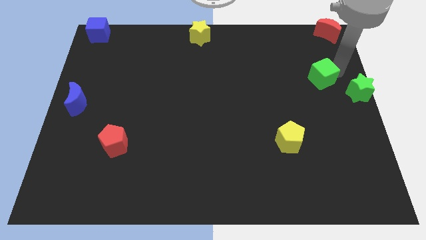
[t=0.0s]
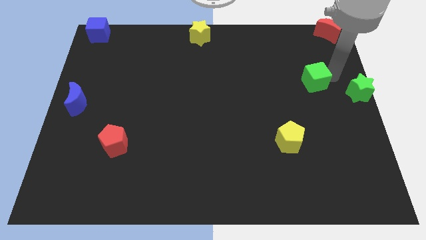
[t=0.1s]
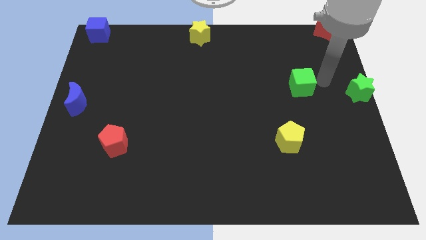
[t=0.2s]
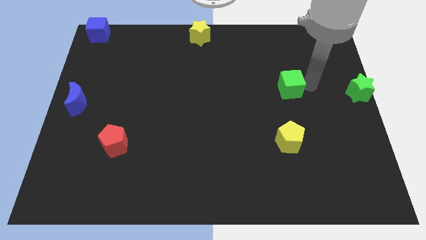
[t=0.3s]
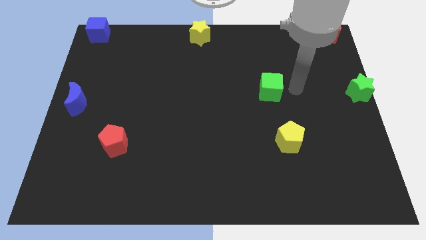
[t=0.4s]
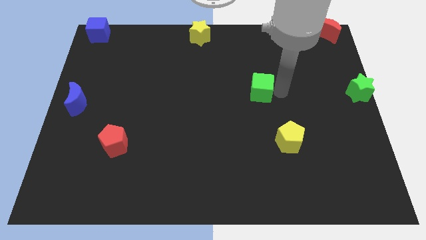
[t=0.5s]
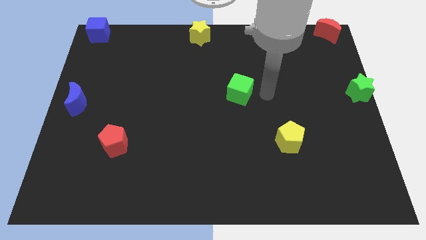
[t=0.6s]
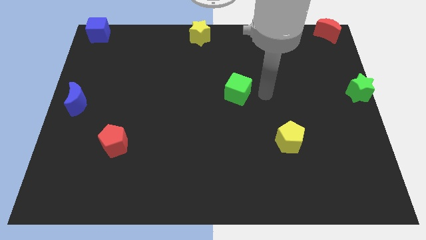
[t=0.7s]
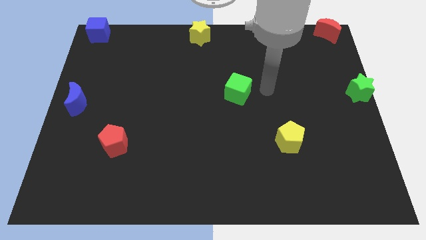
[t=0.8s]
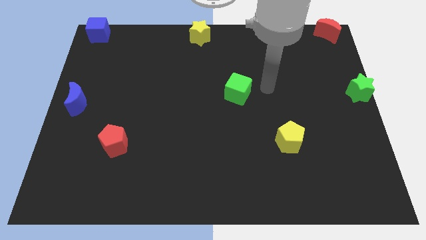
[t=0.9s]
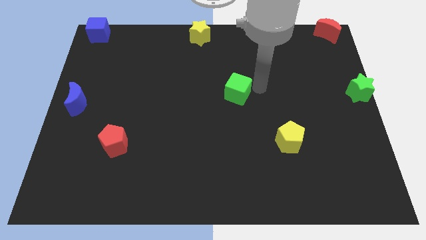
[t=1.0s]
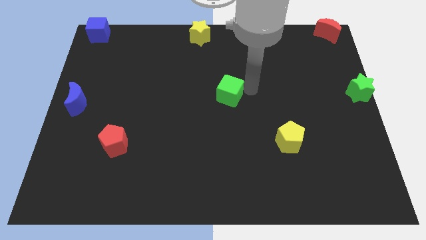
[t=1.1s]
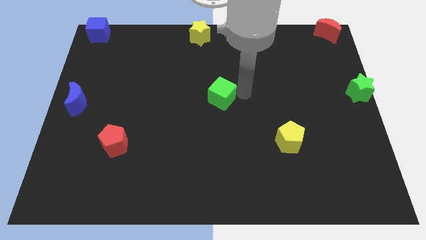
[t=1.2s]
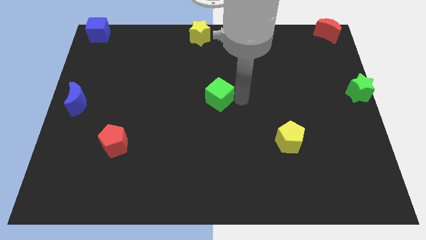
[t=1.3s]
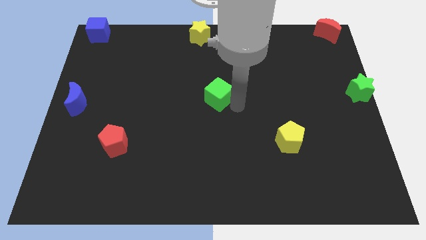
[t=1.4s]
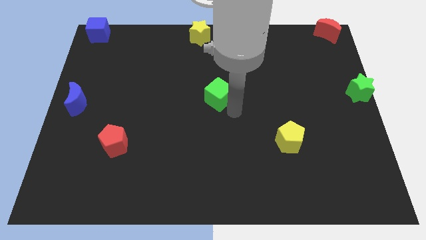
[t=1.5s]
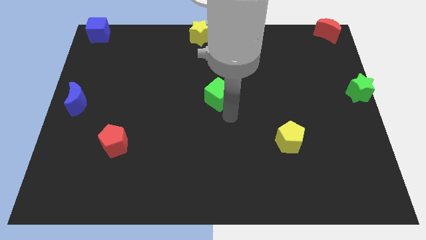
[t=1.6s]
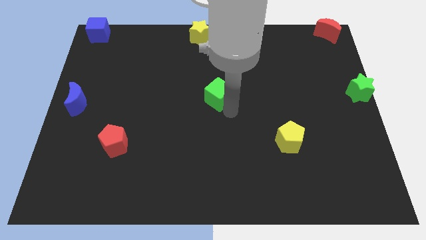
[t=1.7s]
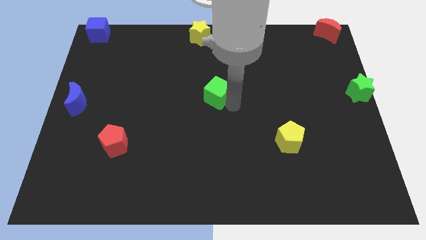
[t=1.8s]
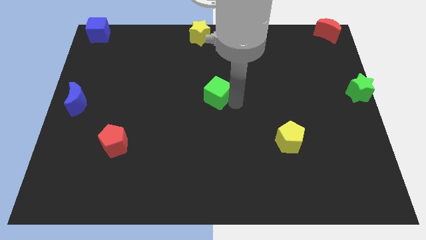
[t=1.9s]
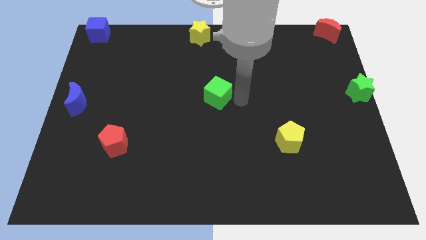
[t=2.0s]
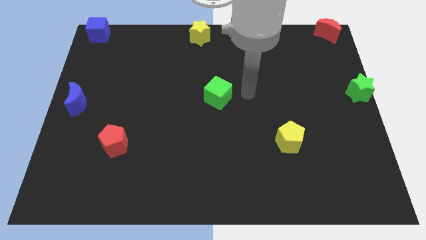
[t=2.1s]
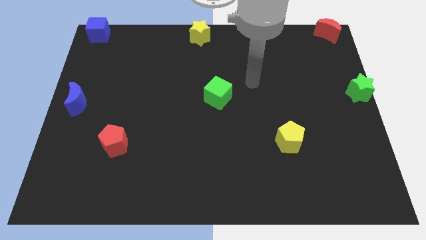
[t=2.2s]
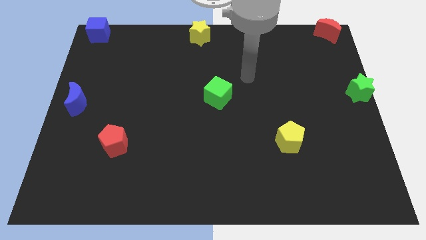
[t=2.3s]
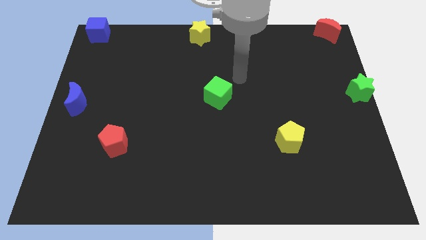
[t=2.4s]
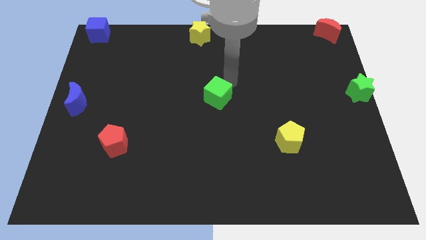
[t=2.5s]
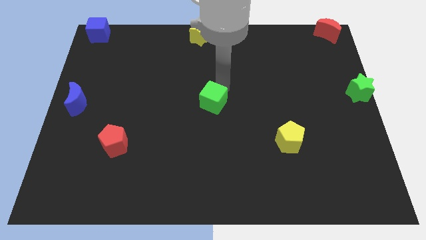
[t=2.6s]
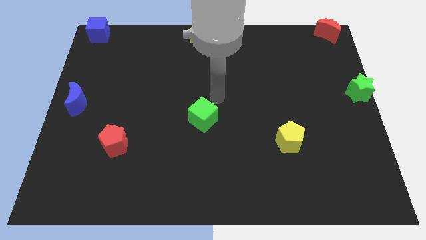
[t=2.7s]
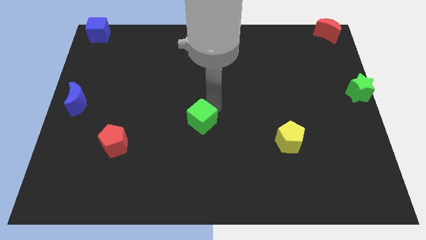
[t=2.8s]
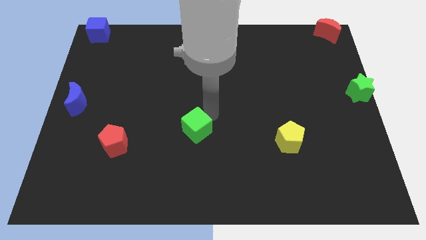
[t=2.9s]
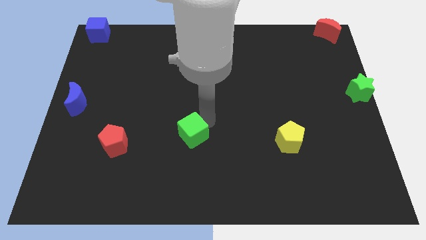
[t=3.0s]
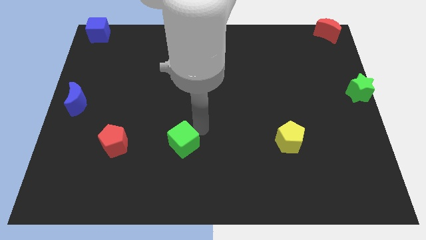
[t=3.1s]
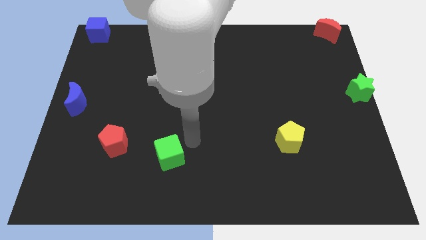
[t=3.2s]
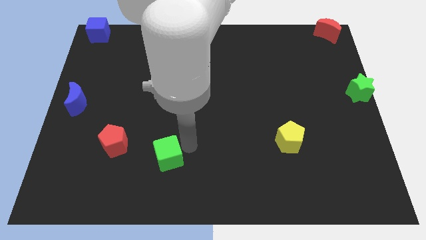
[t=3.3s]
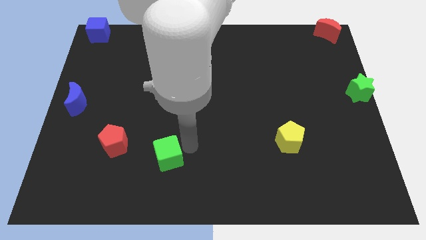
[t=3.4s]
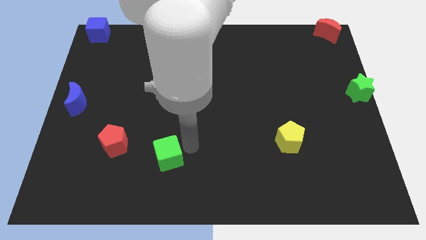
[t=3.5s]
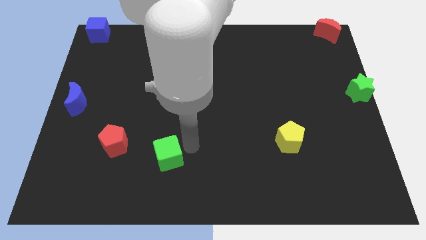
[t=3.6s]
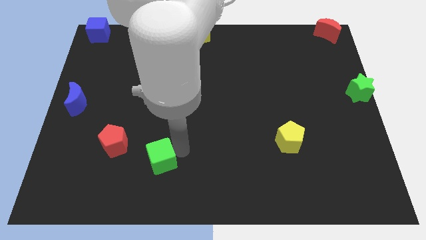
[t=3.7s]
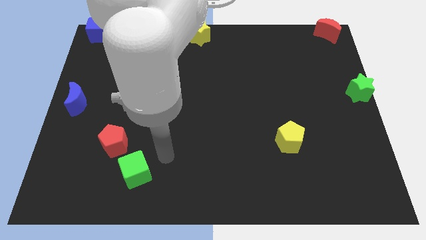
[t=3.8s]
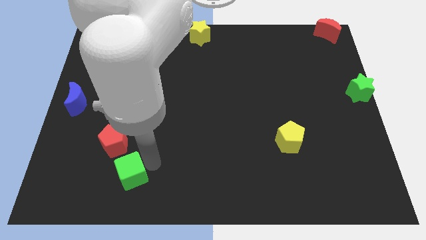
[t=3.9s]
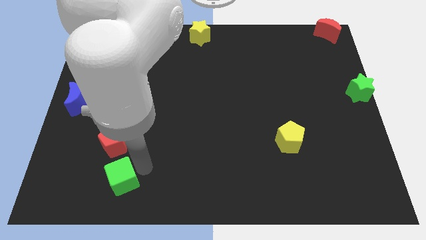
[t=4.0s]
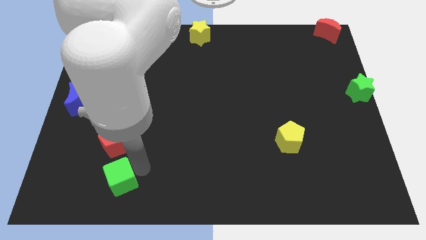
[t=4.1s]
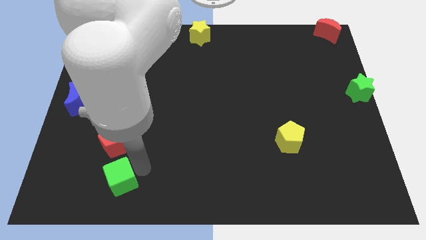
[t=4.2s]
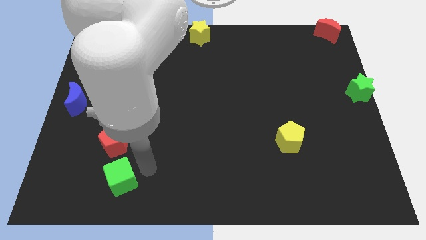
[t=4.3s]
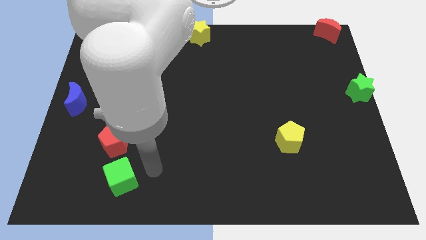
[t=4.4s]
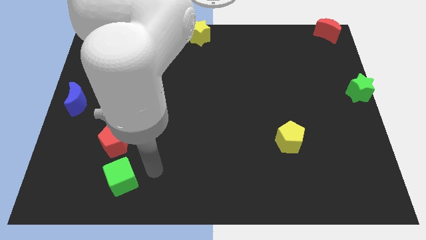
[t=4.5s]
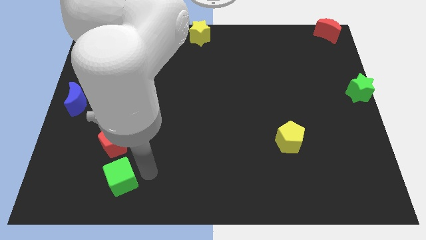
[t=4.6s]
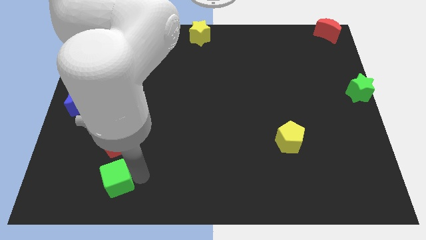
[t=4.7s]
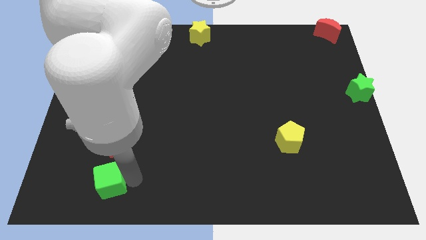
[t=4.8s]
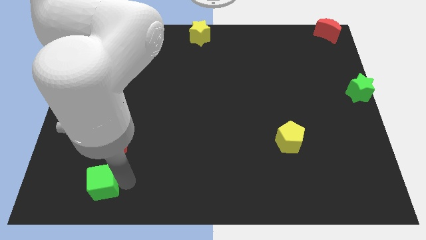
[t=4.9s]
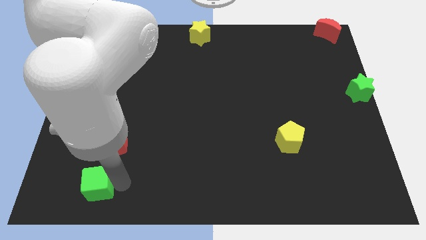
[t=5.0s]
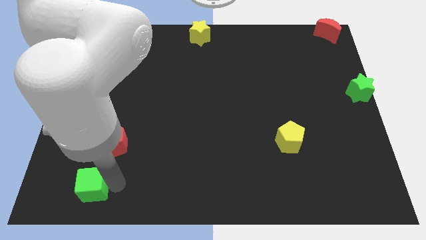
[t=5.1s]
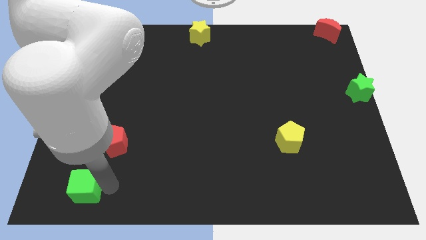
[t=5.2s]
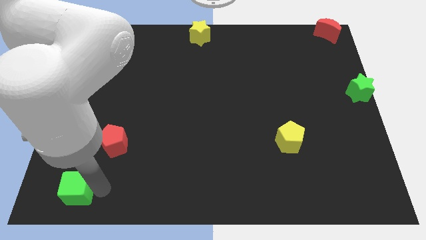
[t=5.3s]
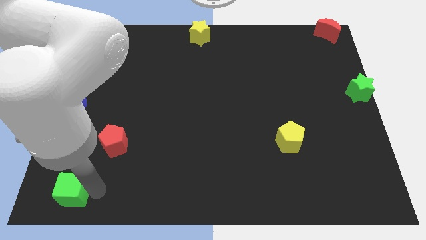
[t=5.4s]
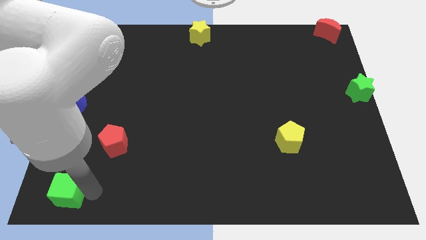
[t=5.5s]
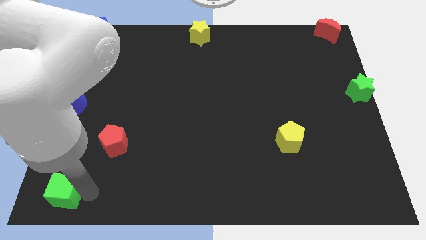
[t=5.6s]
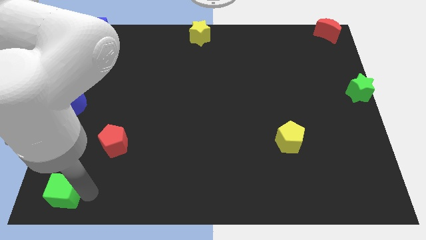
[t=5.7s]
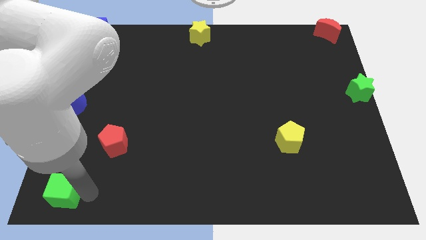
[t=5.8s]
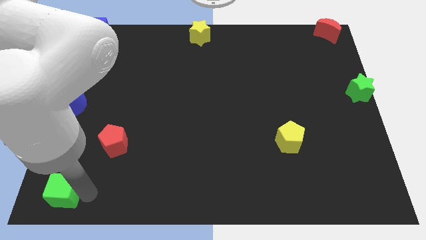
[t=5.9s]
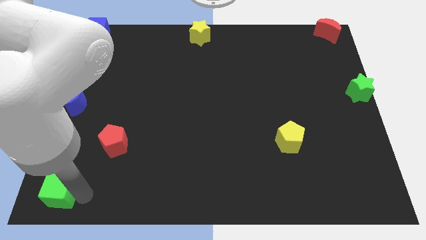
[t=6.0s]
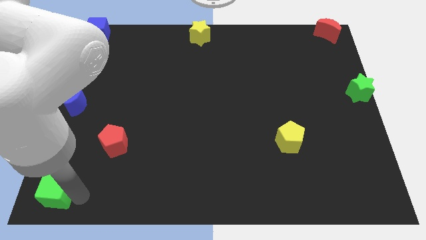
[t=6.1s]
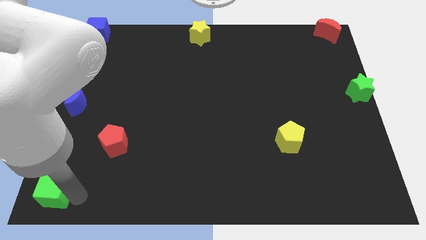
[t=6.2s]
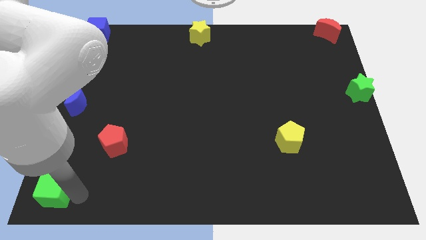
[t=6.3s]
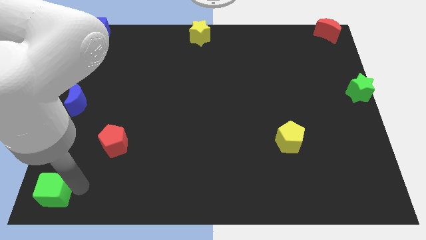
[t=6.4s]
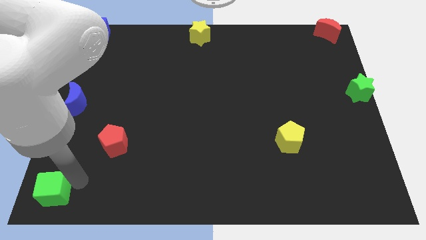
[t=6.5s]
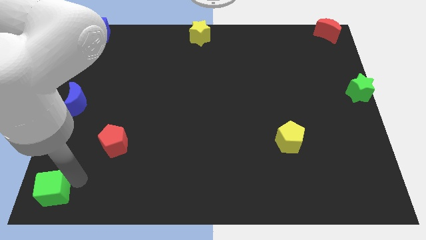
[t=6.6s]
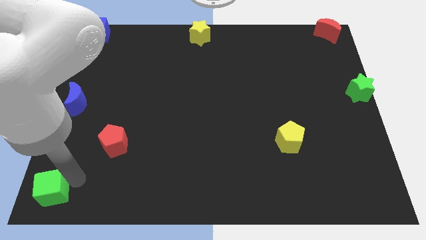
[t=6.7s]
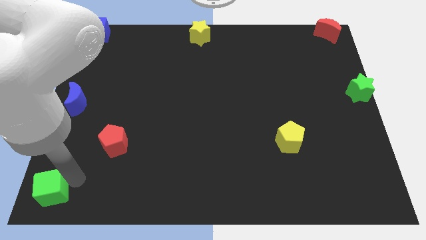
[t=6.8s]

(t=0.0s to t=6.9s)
place the green cube towards the bottom left of the board

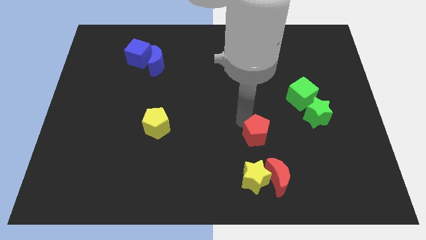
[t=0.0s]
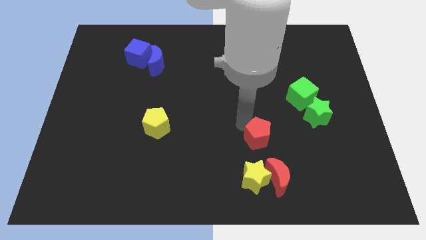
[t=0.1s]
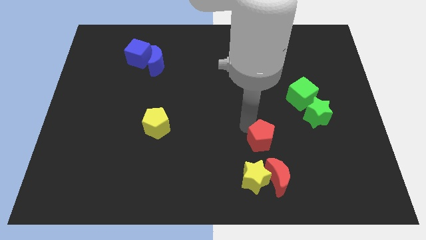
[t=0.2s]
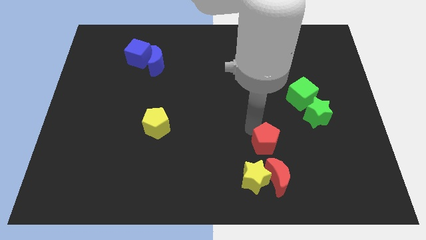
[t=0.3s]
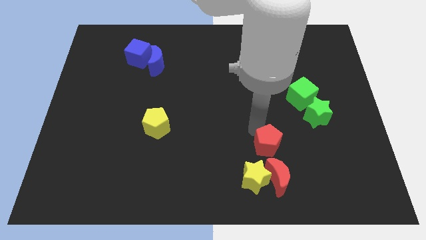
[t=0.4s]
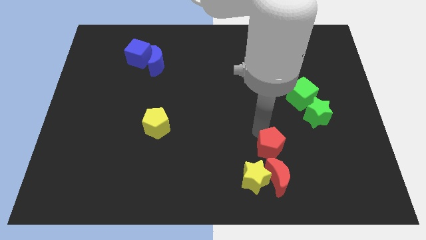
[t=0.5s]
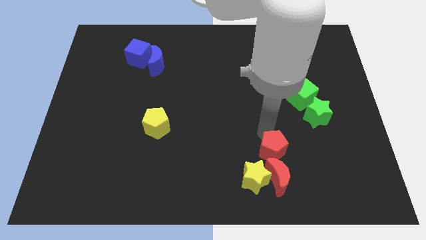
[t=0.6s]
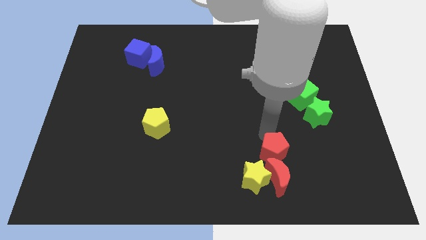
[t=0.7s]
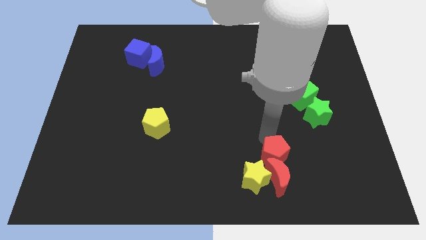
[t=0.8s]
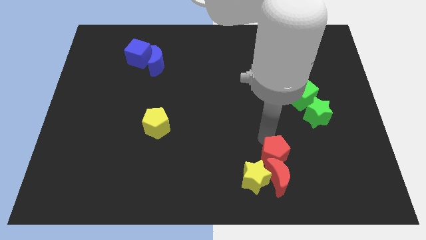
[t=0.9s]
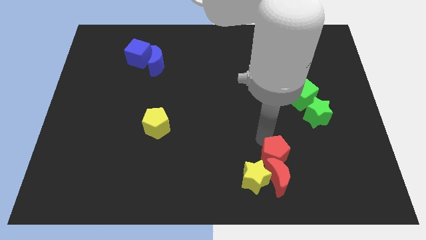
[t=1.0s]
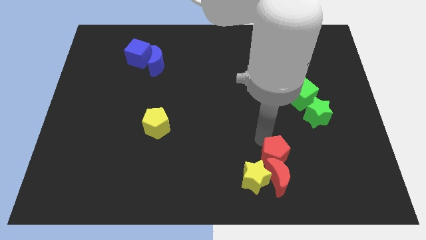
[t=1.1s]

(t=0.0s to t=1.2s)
put red pentagon on top of red moon

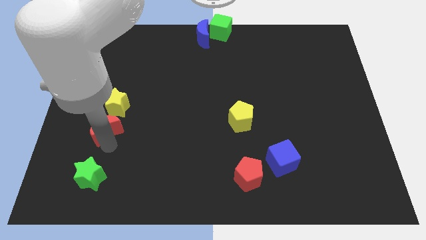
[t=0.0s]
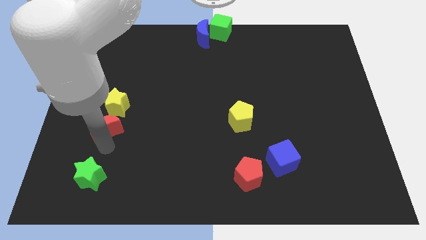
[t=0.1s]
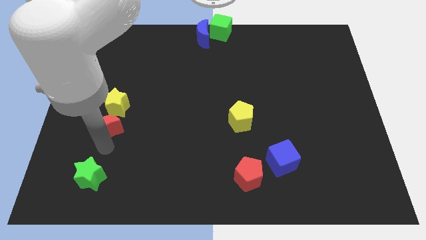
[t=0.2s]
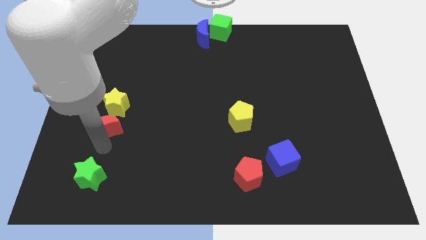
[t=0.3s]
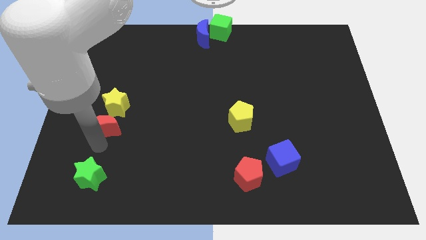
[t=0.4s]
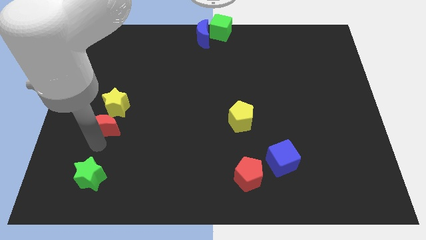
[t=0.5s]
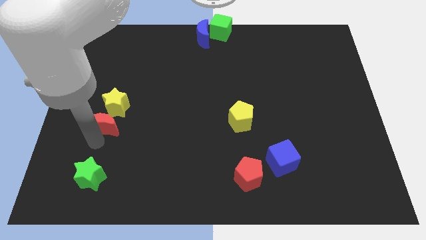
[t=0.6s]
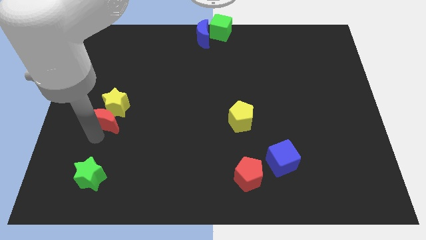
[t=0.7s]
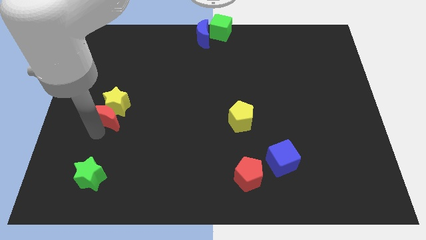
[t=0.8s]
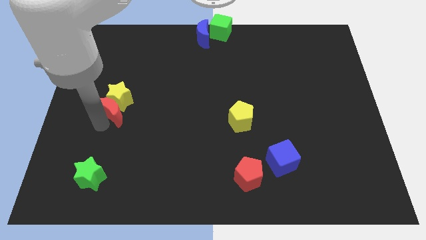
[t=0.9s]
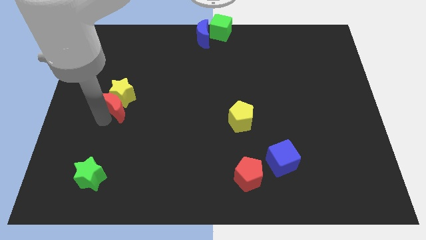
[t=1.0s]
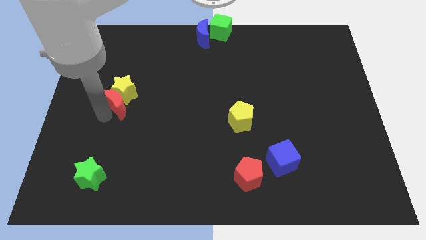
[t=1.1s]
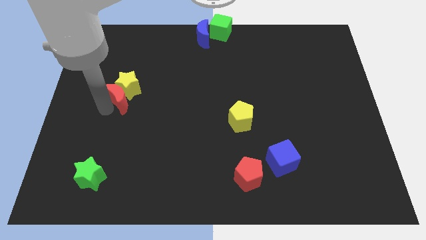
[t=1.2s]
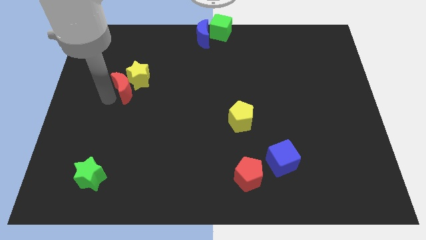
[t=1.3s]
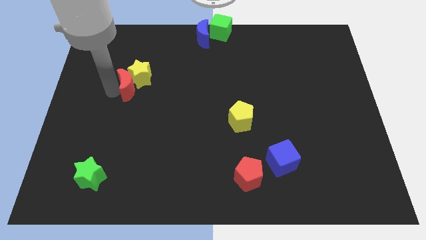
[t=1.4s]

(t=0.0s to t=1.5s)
slightly push the red crescent with the yellow star towards the top center of the board
